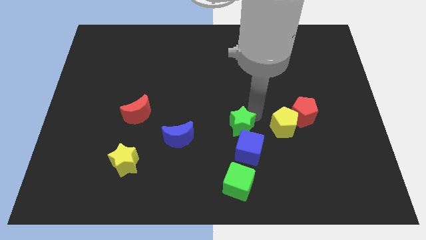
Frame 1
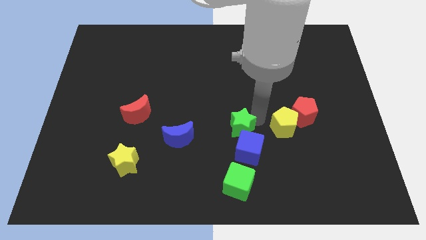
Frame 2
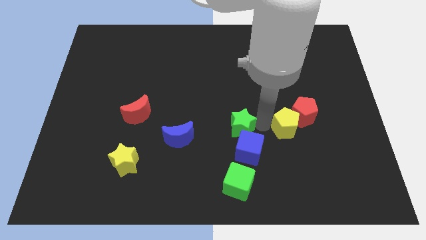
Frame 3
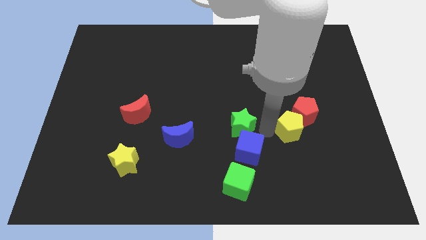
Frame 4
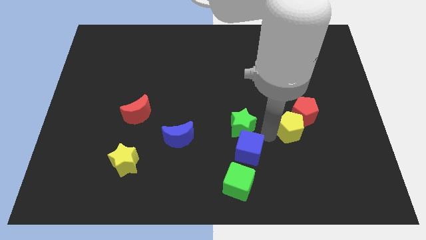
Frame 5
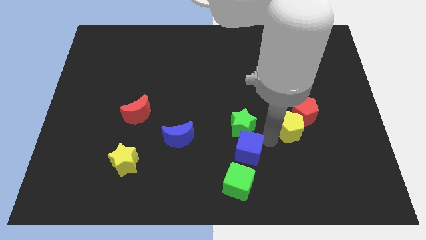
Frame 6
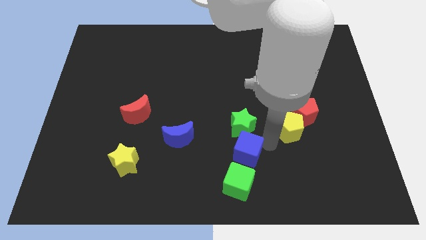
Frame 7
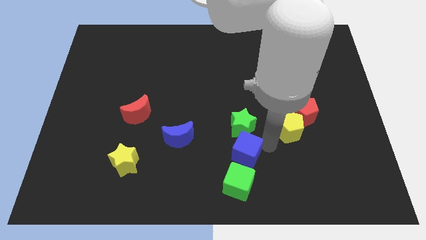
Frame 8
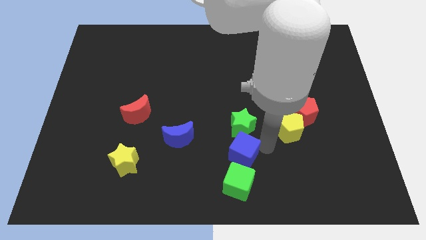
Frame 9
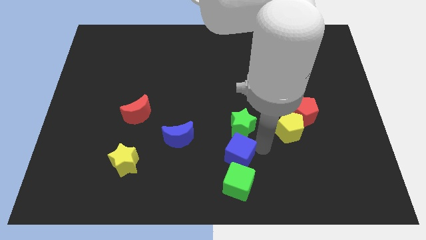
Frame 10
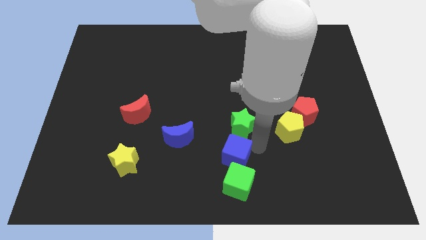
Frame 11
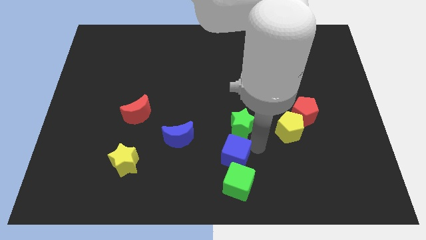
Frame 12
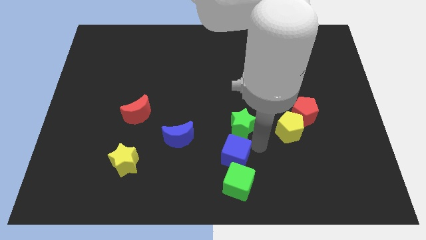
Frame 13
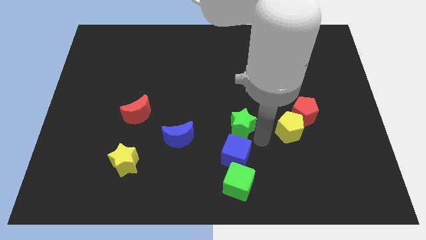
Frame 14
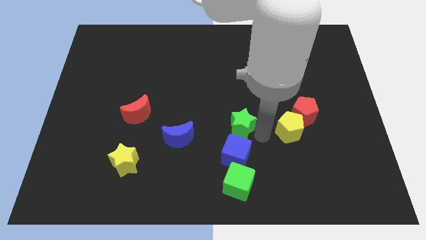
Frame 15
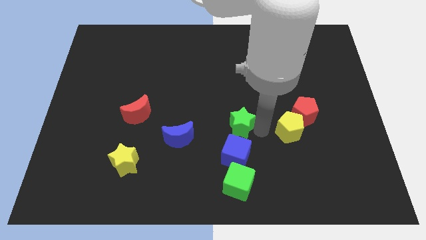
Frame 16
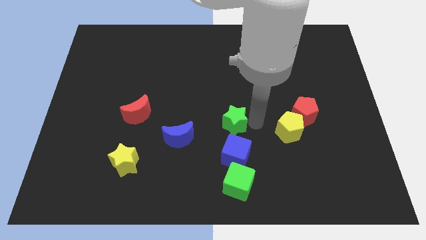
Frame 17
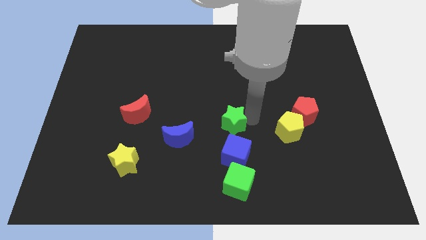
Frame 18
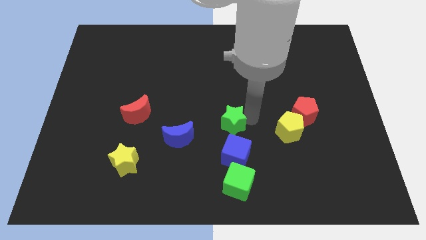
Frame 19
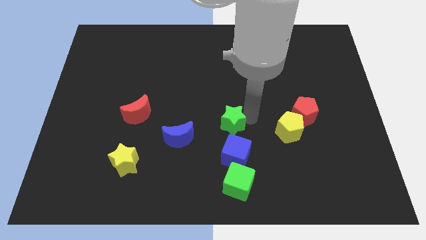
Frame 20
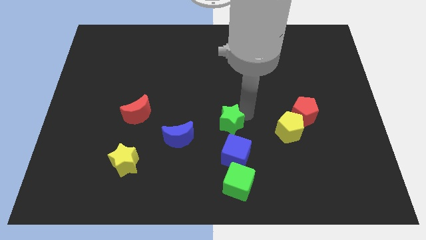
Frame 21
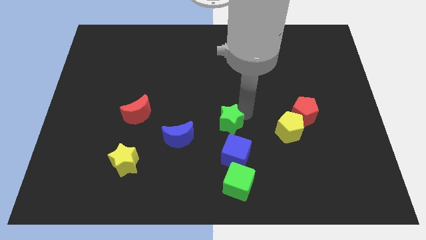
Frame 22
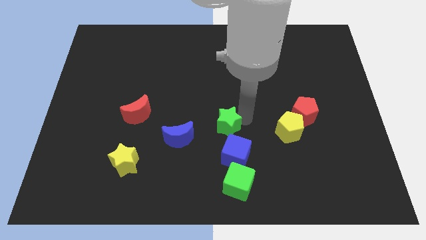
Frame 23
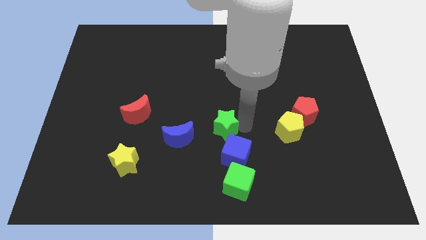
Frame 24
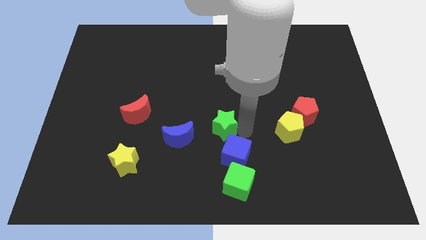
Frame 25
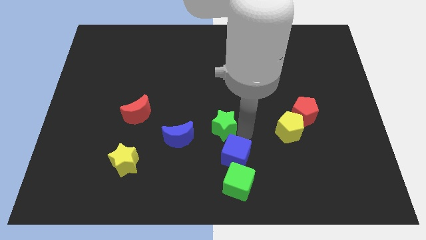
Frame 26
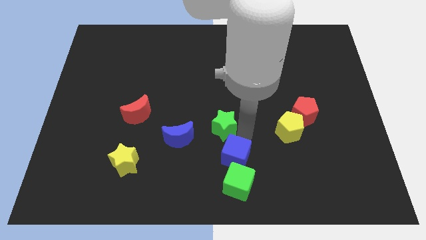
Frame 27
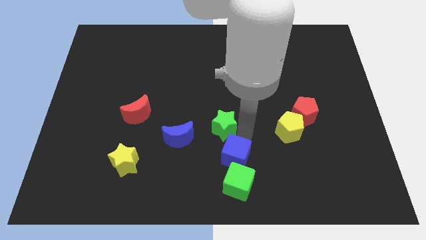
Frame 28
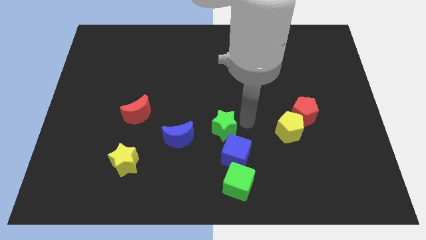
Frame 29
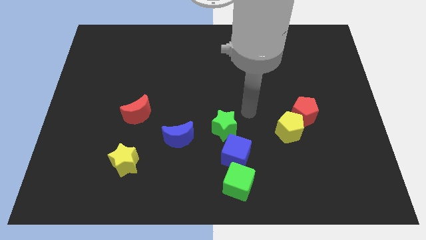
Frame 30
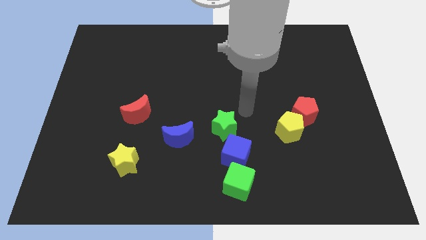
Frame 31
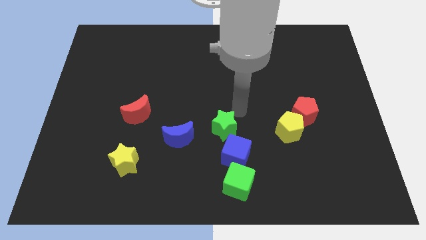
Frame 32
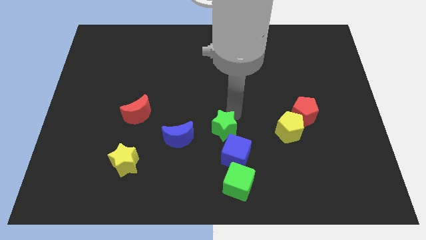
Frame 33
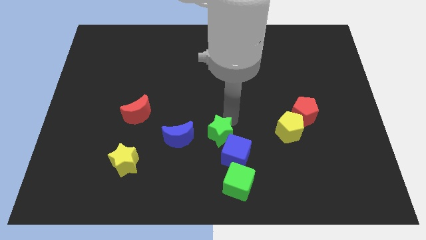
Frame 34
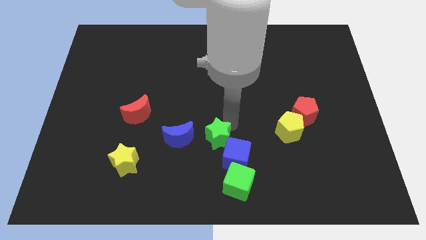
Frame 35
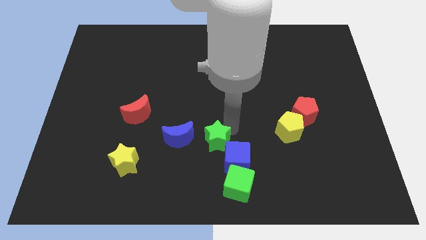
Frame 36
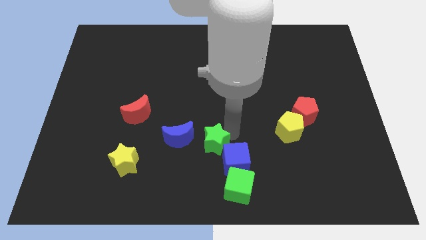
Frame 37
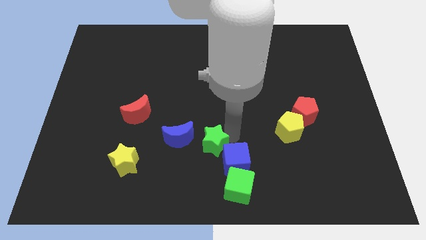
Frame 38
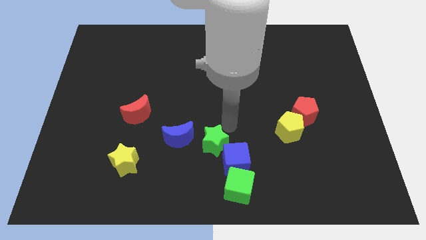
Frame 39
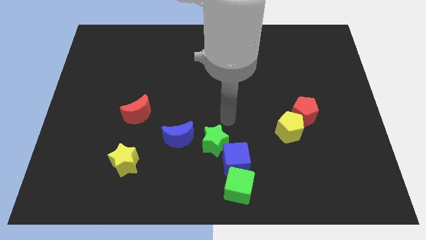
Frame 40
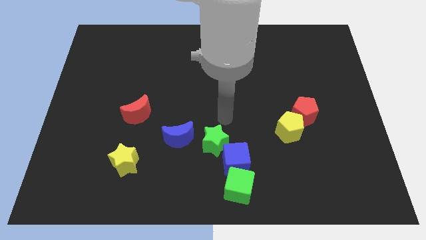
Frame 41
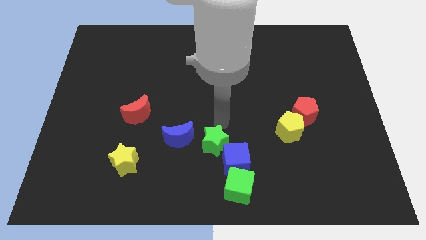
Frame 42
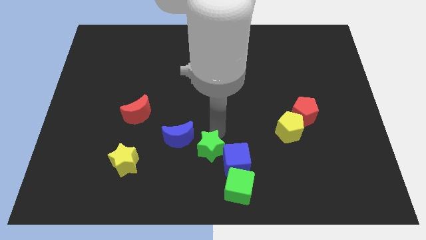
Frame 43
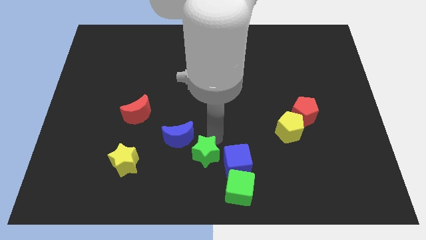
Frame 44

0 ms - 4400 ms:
push the green star into the green cube

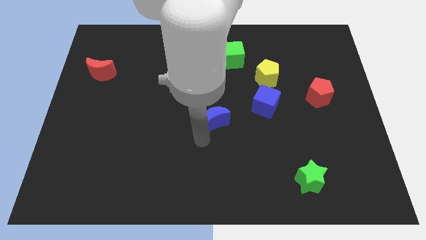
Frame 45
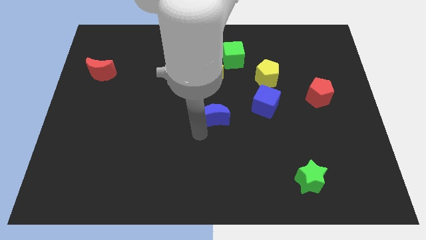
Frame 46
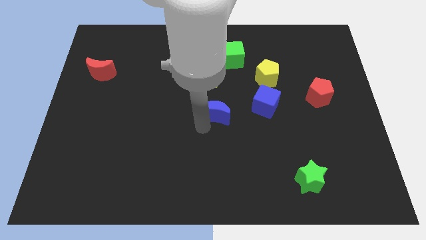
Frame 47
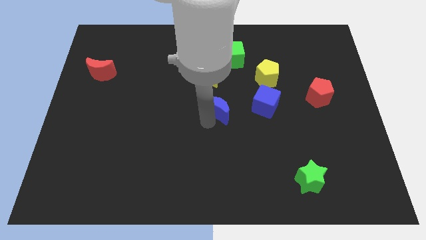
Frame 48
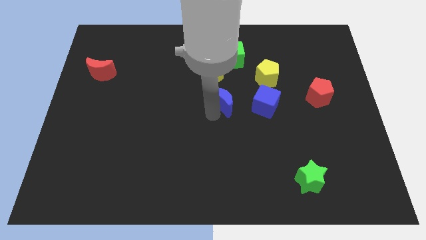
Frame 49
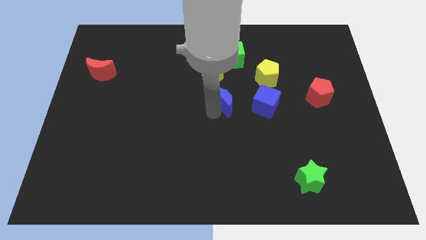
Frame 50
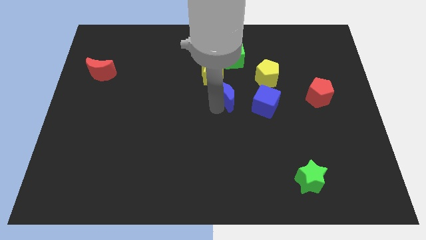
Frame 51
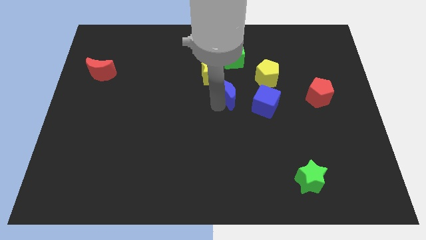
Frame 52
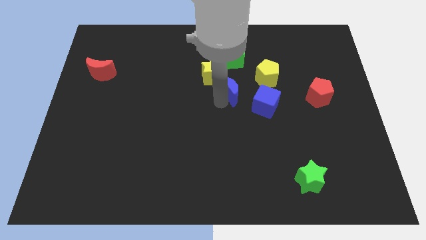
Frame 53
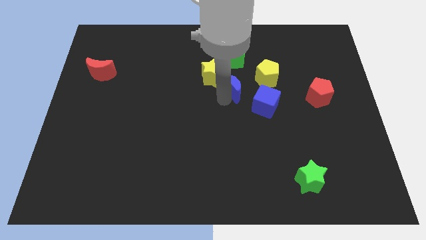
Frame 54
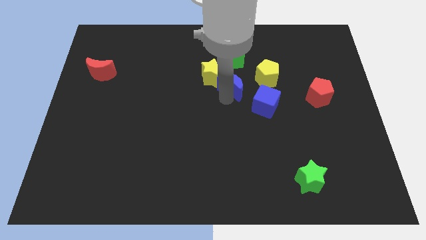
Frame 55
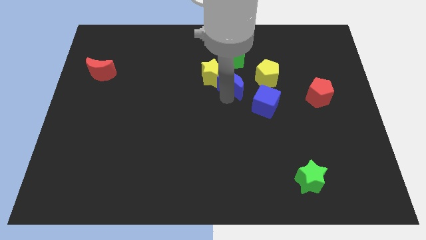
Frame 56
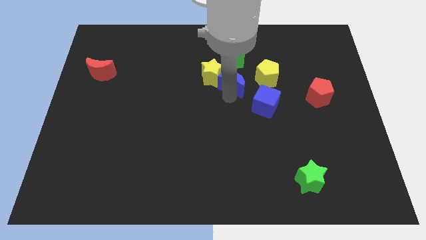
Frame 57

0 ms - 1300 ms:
slide the blue crescent into the bottom right side of the yellow star

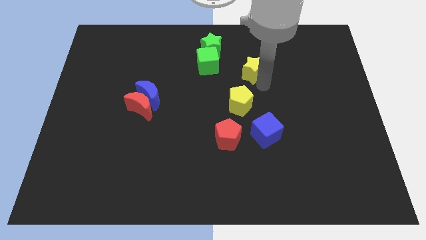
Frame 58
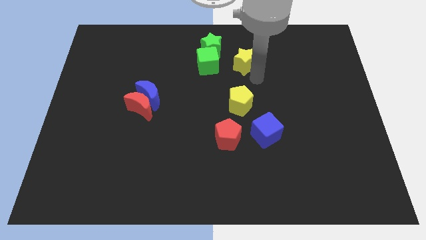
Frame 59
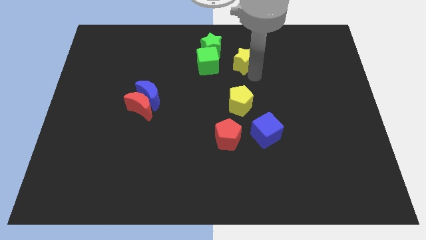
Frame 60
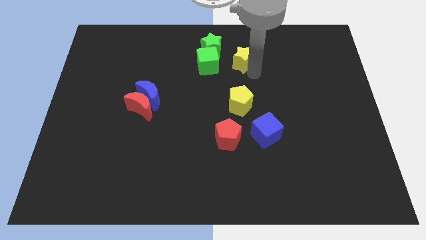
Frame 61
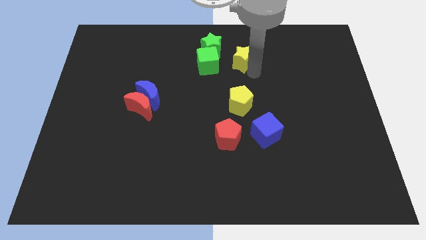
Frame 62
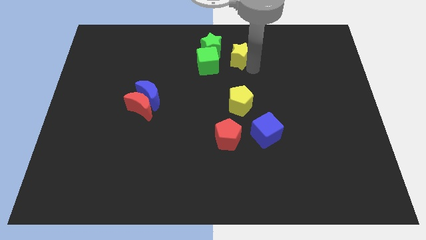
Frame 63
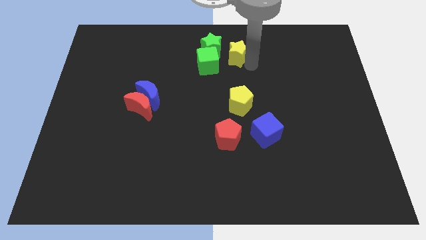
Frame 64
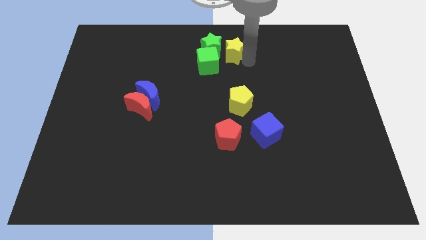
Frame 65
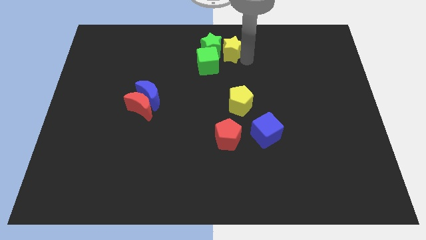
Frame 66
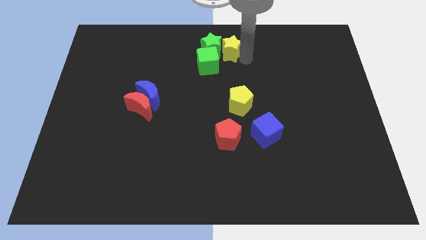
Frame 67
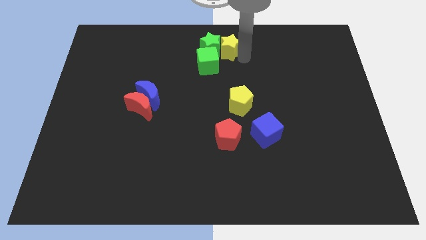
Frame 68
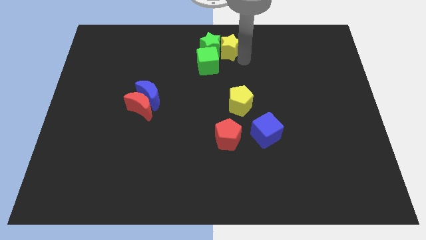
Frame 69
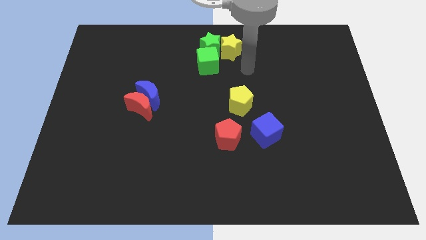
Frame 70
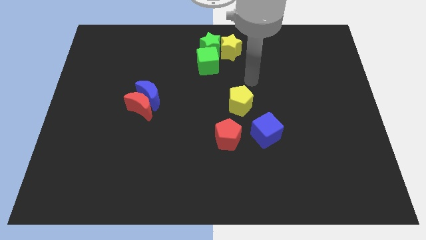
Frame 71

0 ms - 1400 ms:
move the yellow star into the green star

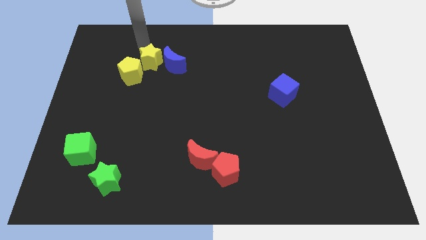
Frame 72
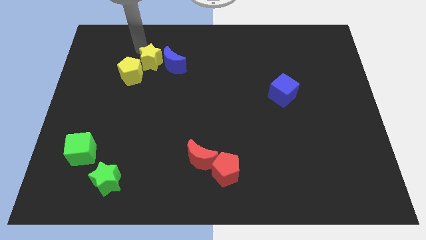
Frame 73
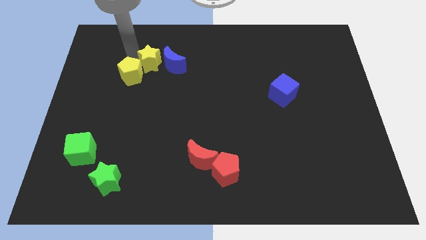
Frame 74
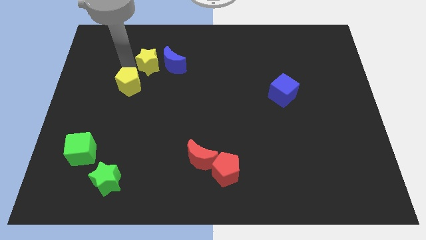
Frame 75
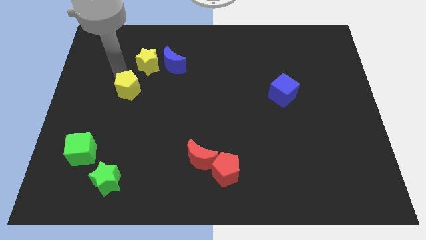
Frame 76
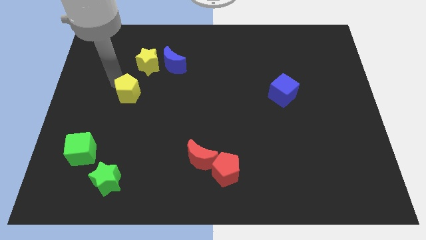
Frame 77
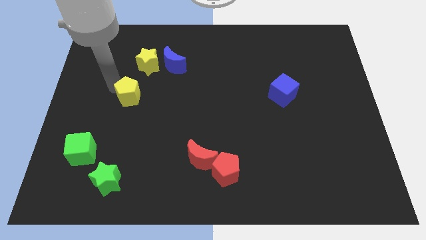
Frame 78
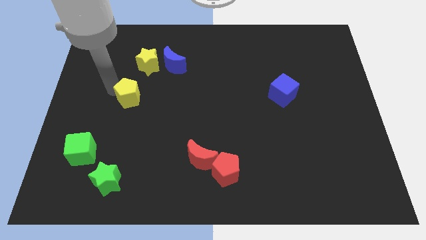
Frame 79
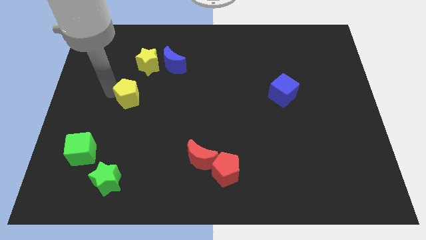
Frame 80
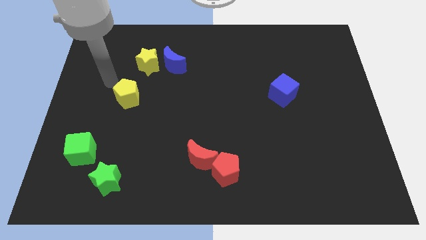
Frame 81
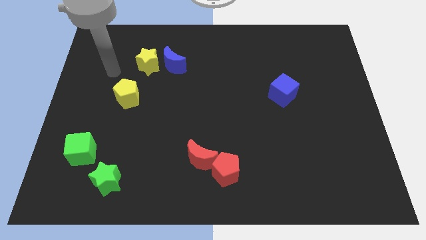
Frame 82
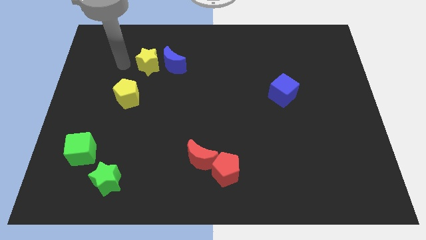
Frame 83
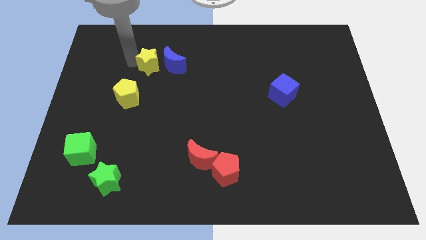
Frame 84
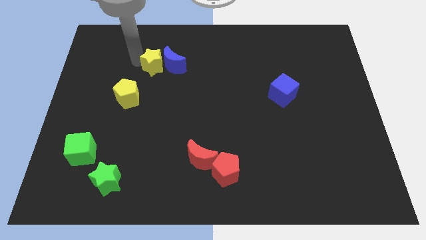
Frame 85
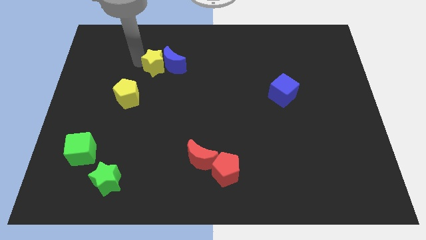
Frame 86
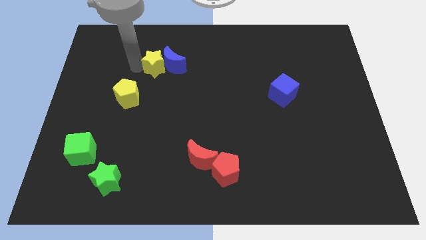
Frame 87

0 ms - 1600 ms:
separate the yellow star and yellow pentagon

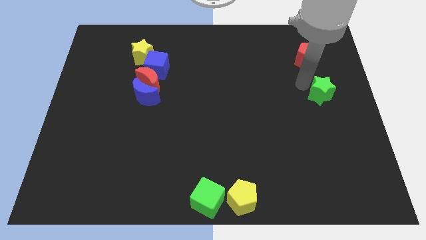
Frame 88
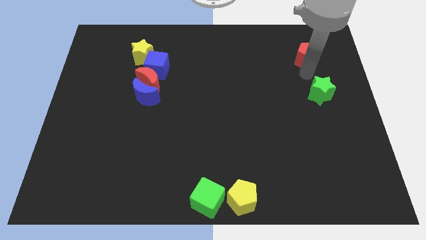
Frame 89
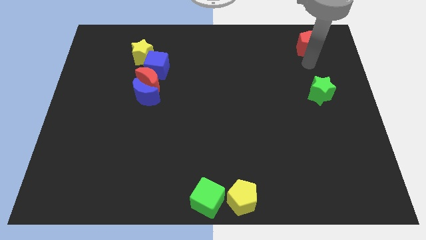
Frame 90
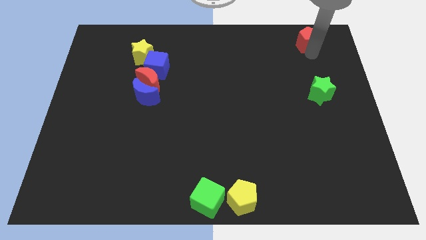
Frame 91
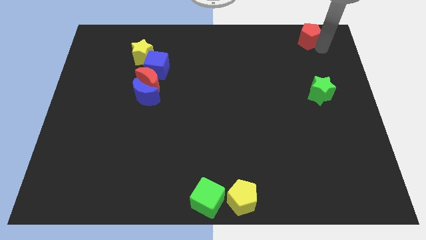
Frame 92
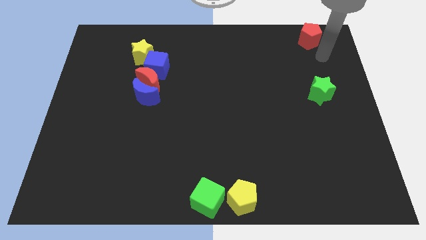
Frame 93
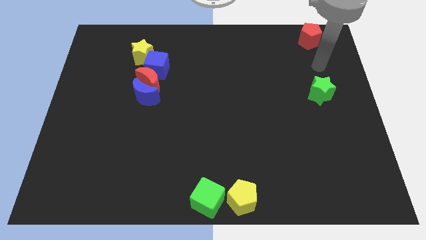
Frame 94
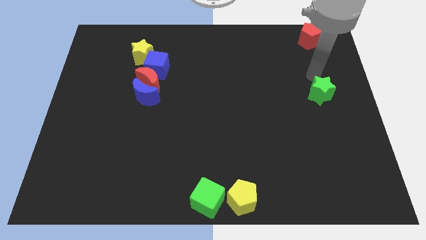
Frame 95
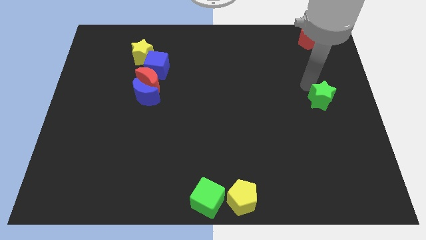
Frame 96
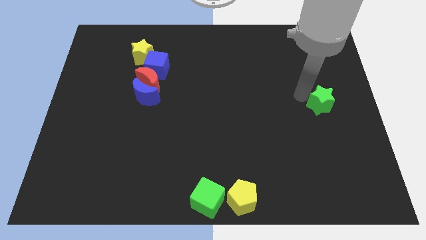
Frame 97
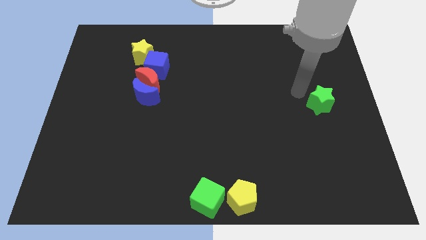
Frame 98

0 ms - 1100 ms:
push red pentagon to the top right of the board
